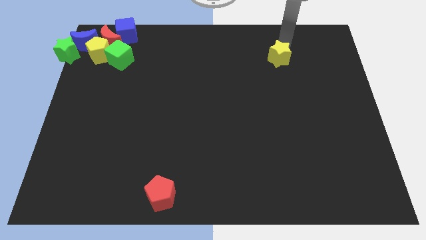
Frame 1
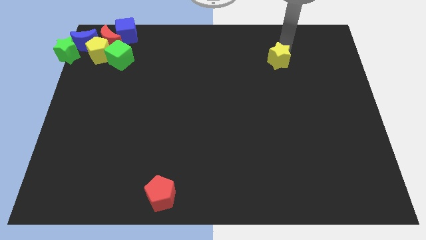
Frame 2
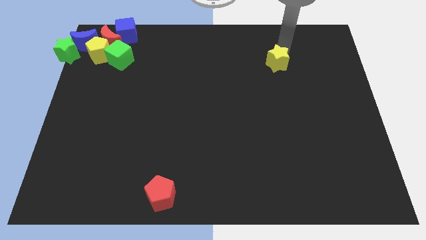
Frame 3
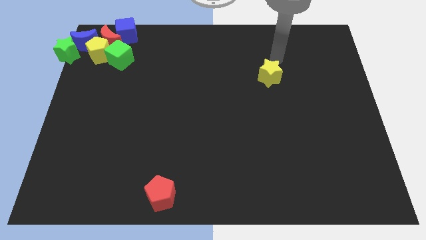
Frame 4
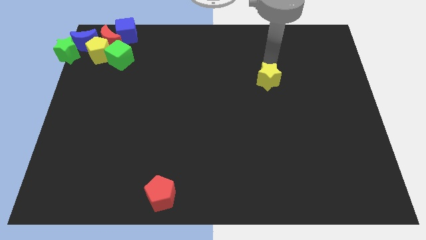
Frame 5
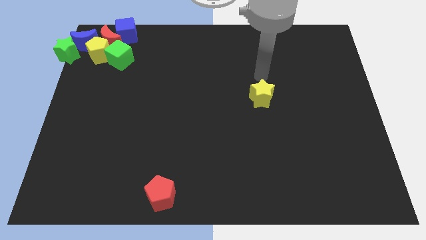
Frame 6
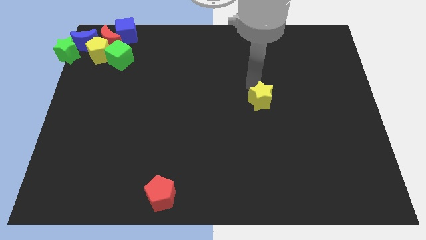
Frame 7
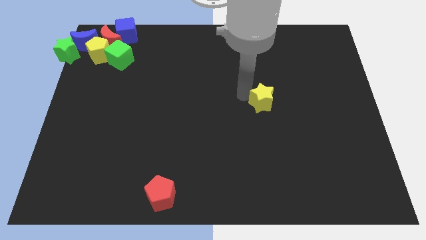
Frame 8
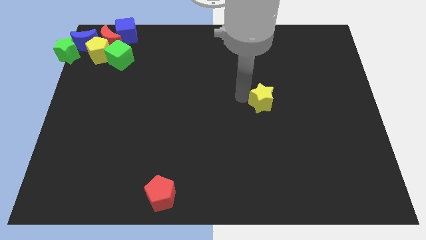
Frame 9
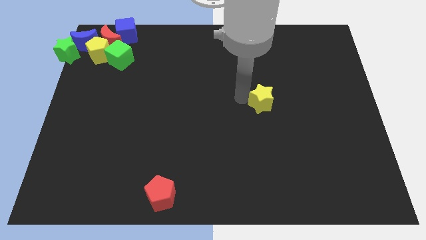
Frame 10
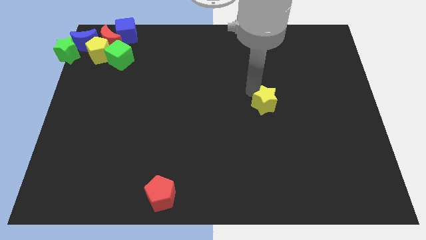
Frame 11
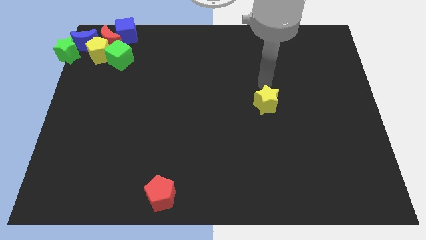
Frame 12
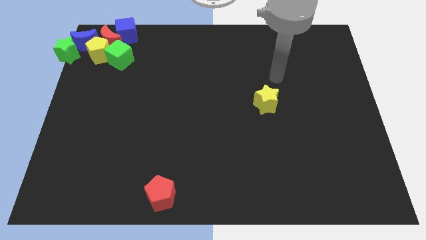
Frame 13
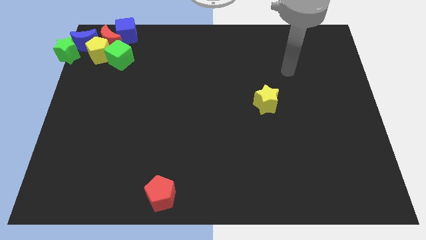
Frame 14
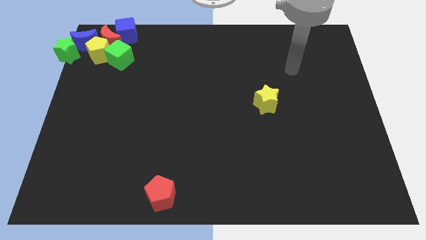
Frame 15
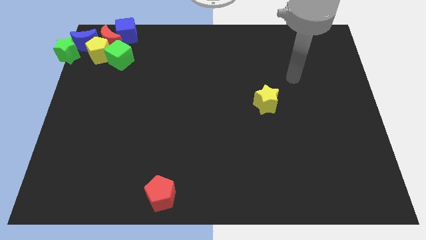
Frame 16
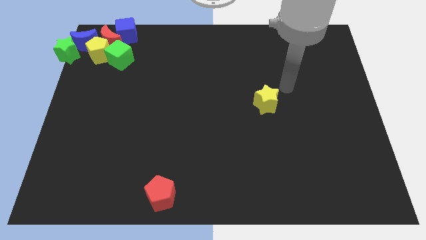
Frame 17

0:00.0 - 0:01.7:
push the yellow star diagonally towards bottom of the board

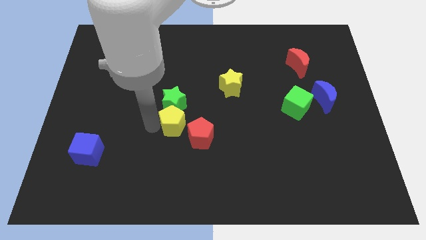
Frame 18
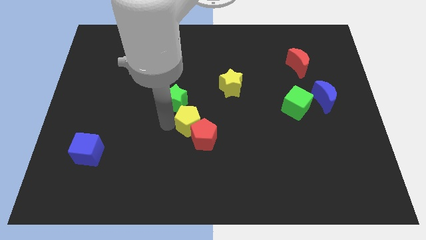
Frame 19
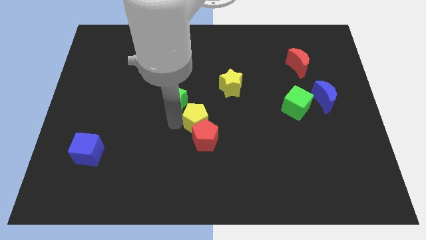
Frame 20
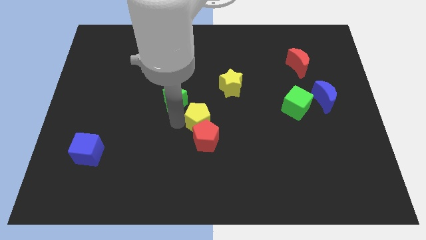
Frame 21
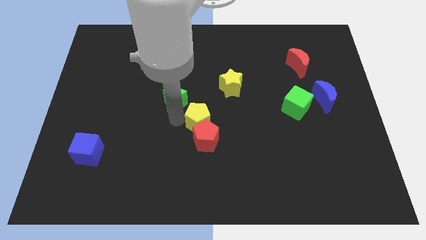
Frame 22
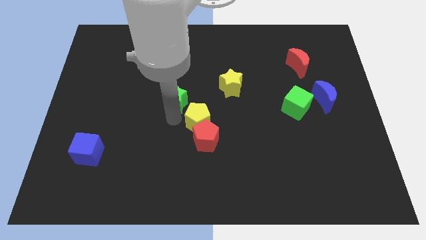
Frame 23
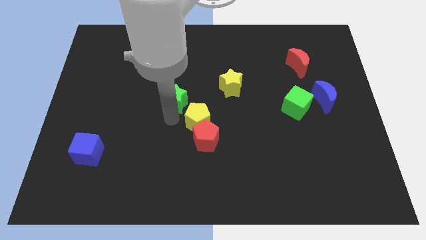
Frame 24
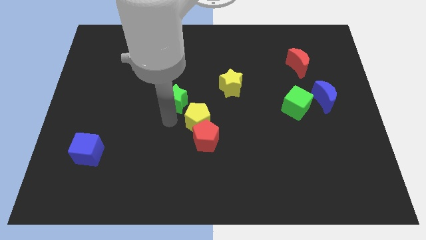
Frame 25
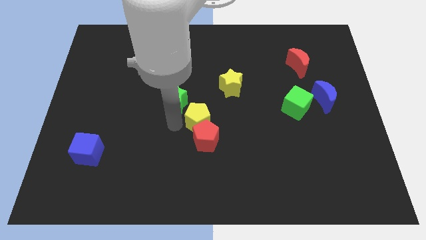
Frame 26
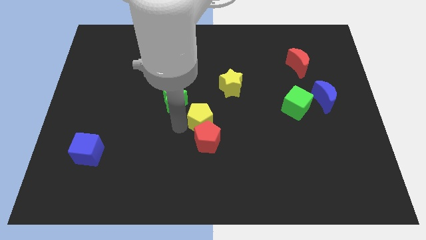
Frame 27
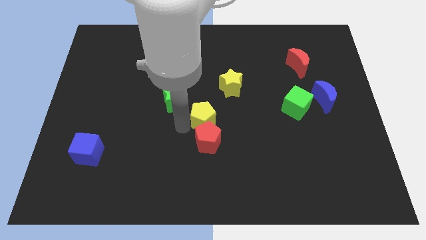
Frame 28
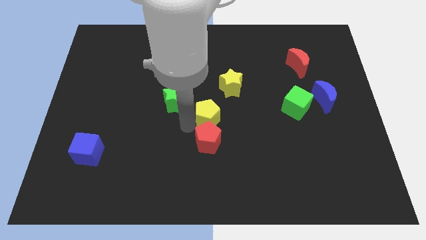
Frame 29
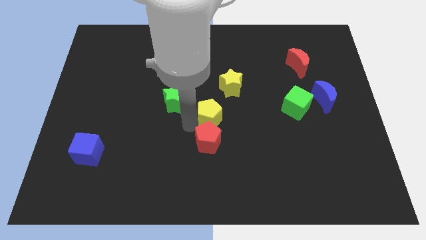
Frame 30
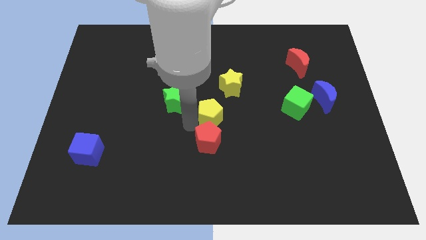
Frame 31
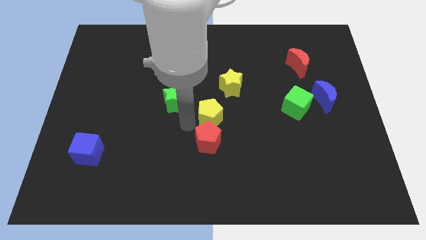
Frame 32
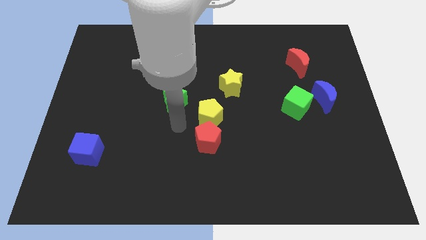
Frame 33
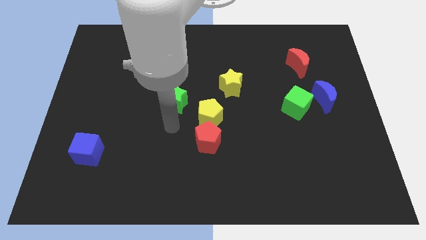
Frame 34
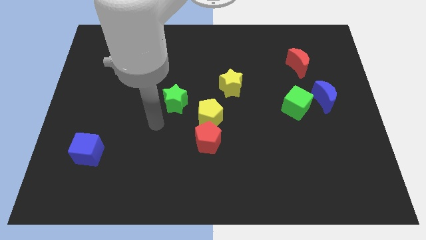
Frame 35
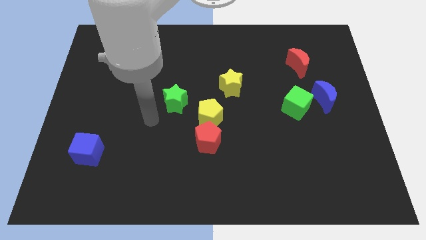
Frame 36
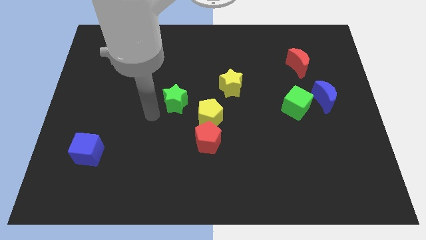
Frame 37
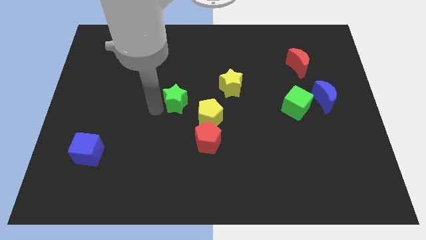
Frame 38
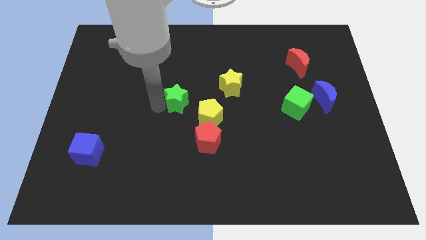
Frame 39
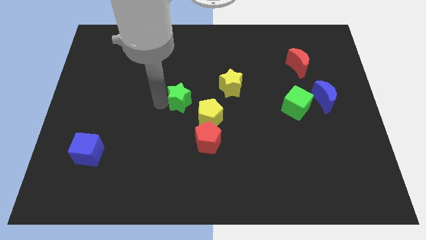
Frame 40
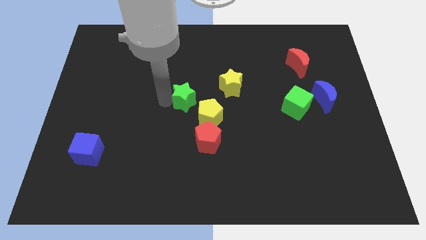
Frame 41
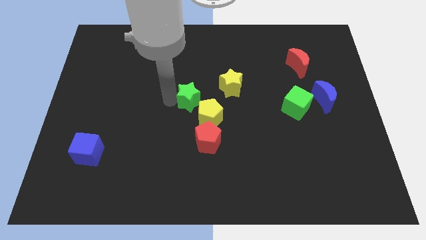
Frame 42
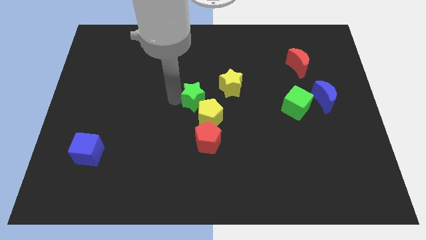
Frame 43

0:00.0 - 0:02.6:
push yellow pentagon towards right side of the board

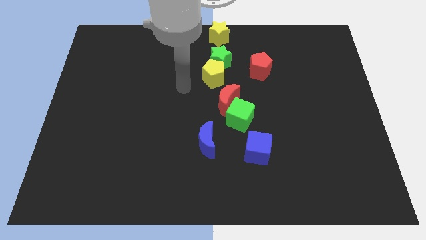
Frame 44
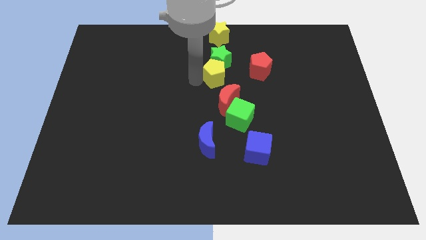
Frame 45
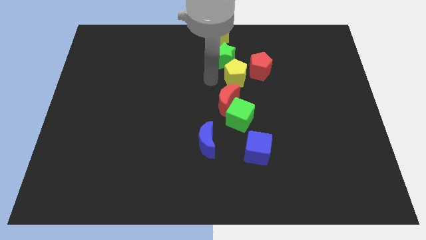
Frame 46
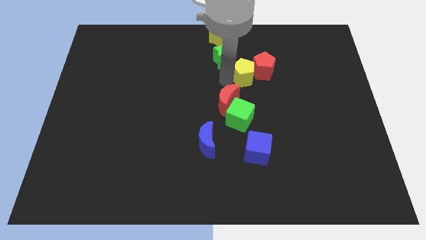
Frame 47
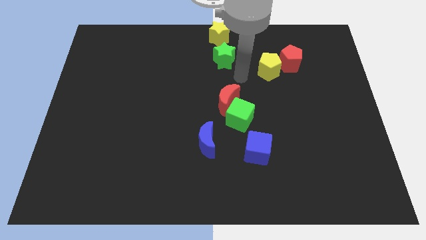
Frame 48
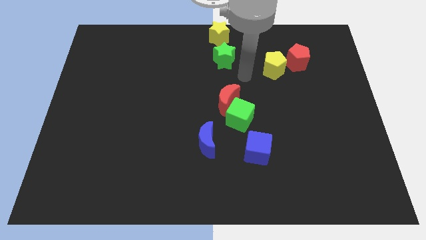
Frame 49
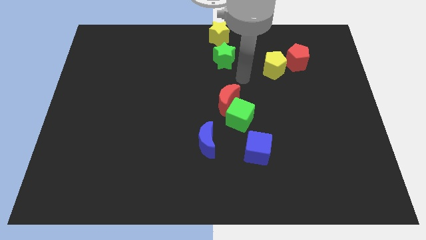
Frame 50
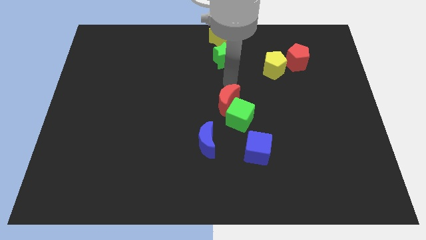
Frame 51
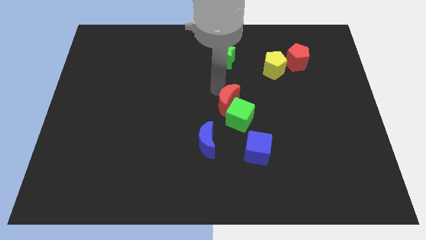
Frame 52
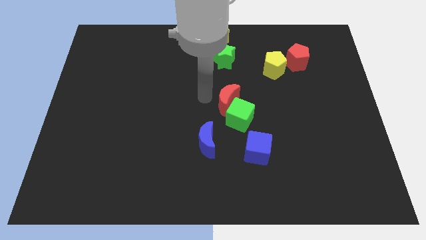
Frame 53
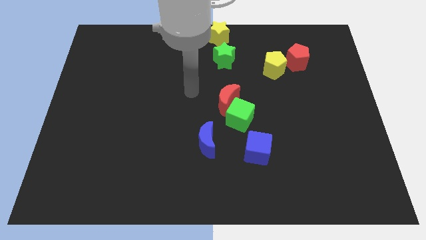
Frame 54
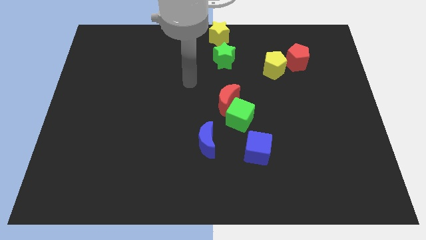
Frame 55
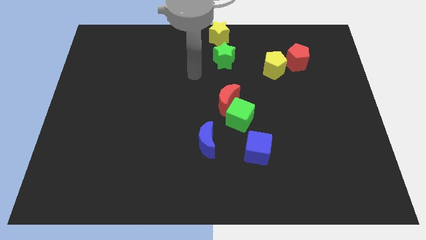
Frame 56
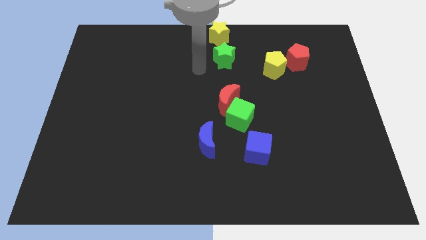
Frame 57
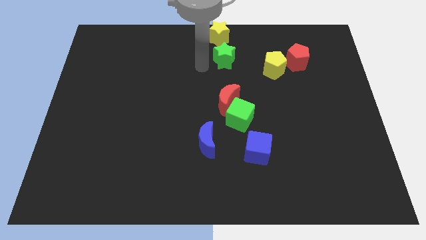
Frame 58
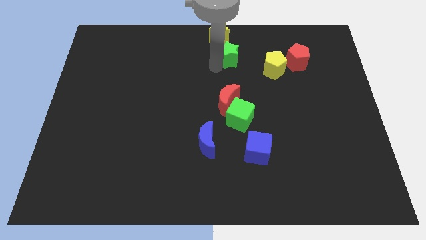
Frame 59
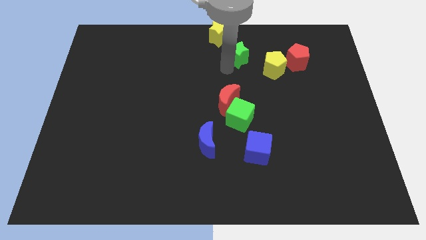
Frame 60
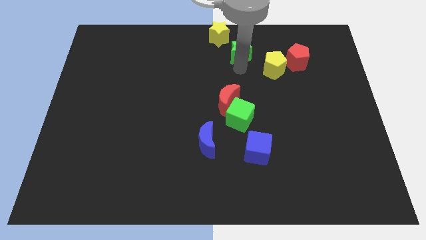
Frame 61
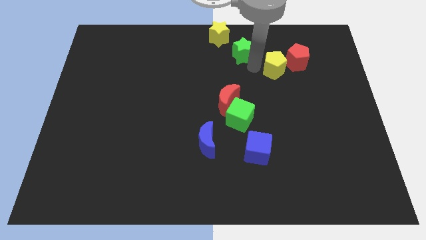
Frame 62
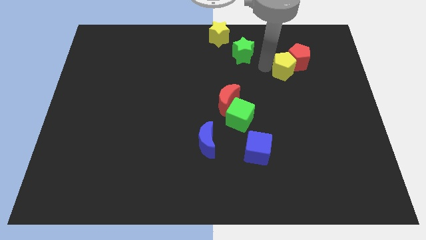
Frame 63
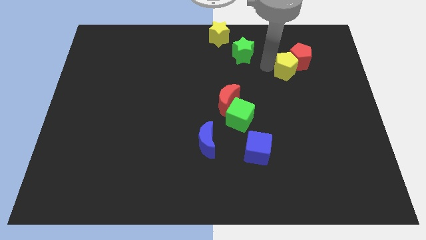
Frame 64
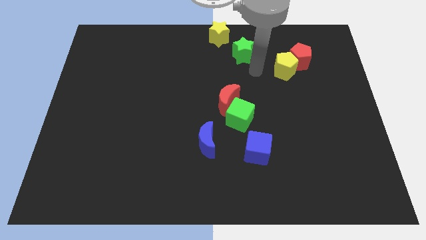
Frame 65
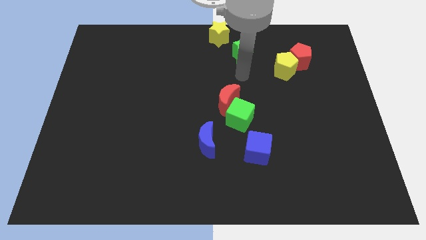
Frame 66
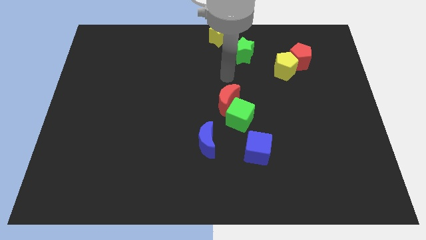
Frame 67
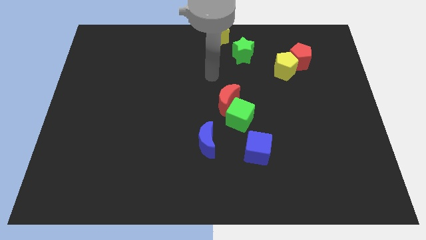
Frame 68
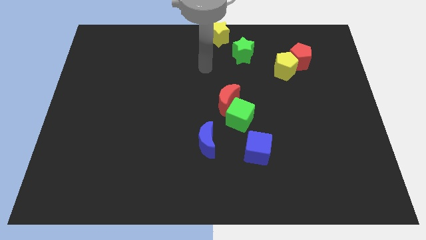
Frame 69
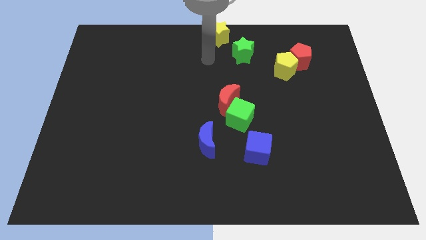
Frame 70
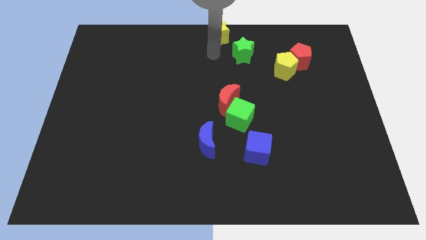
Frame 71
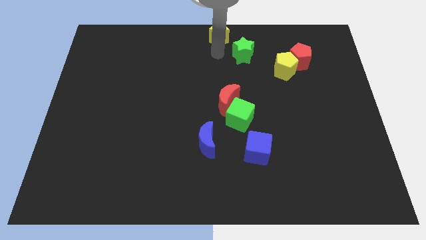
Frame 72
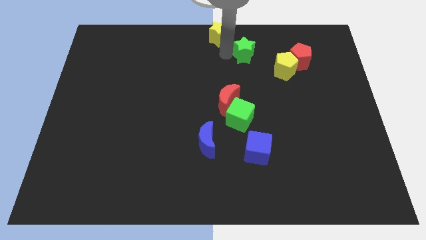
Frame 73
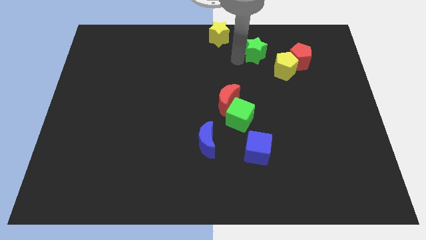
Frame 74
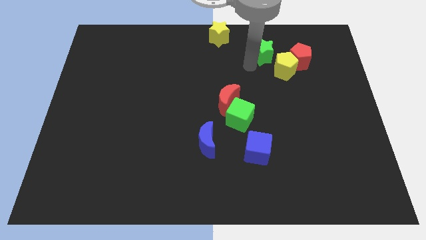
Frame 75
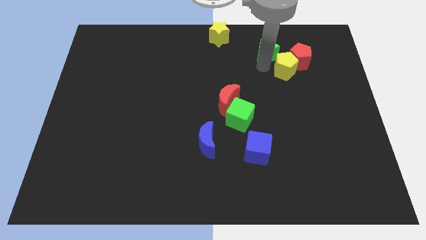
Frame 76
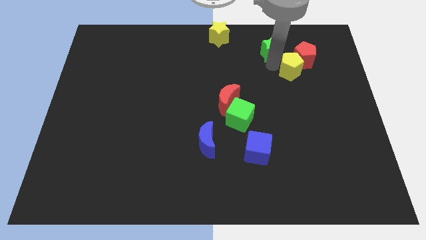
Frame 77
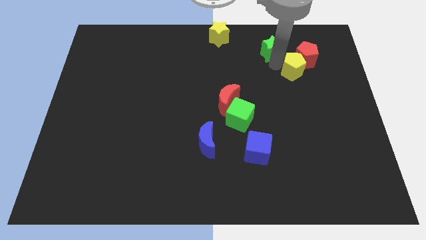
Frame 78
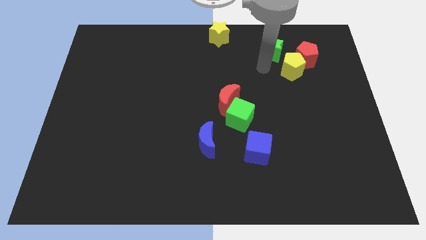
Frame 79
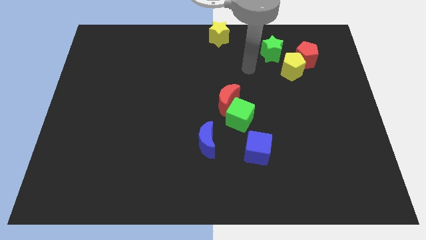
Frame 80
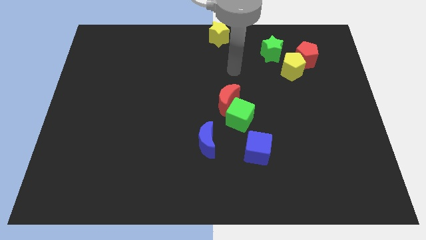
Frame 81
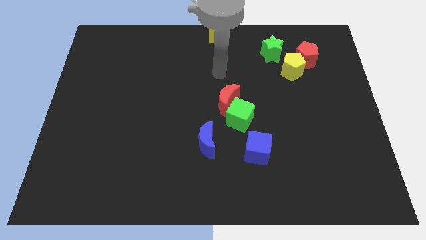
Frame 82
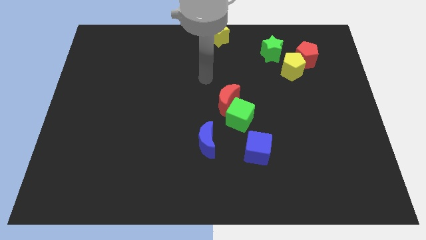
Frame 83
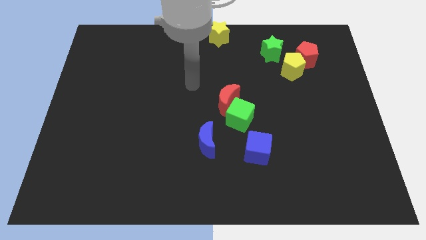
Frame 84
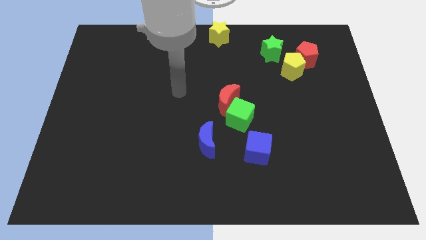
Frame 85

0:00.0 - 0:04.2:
place green star to the top left of yellow pentagon

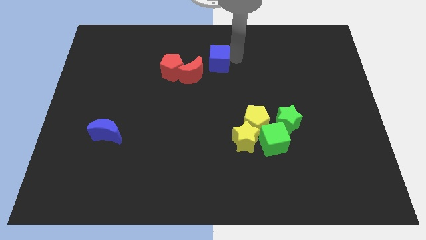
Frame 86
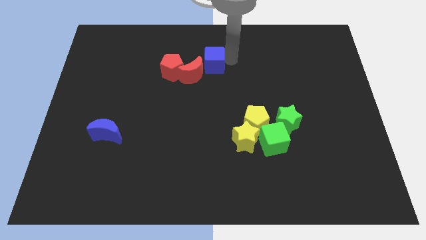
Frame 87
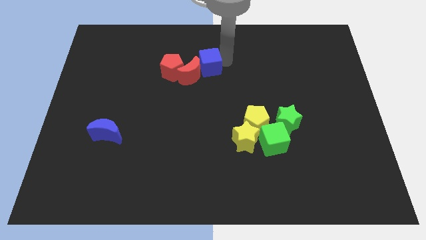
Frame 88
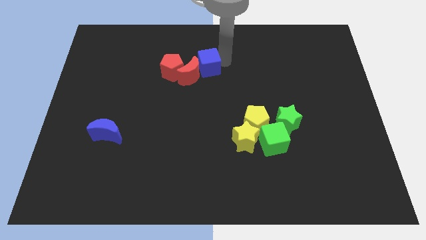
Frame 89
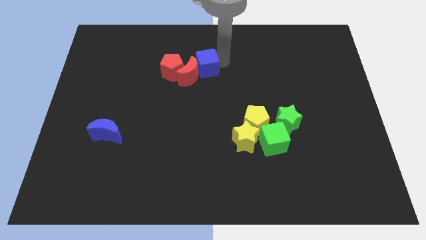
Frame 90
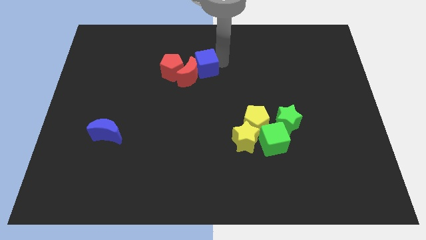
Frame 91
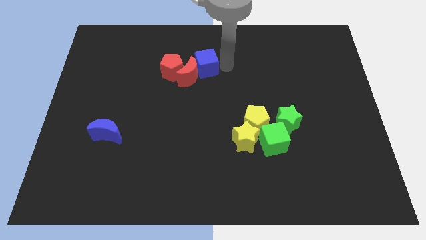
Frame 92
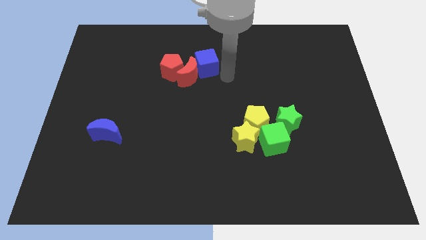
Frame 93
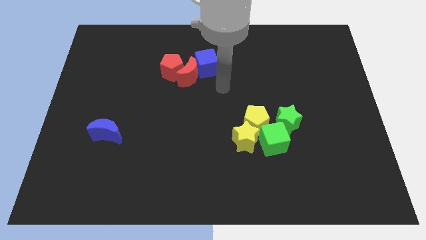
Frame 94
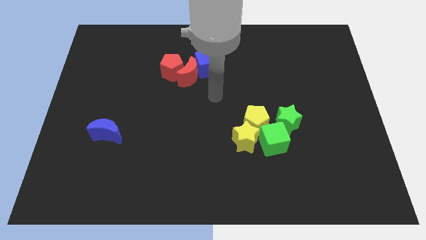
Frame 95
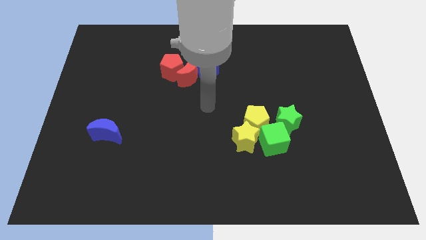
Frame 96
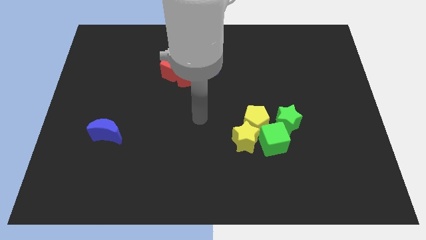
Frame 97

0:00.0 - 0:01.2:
push the blue cube into the red blocks
